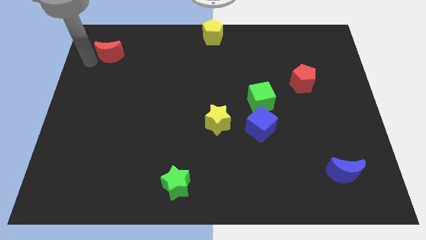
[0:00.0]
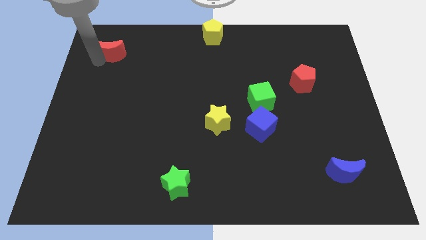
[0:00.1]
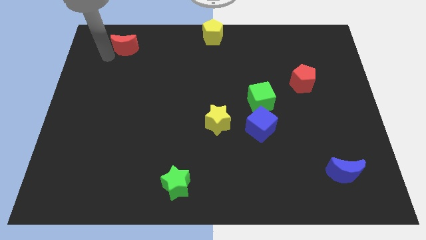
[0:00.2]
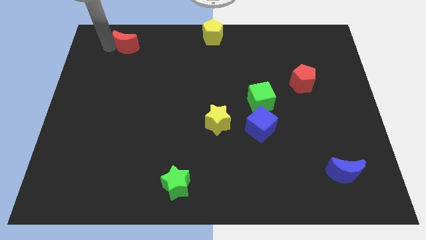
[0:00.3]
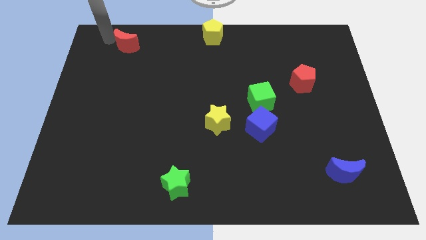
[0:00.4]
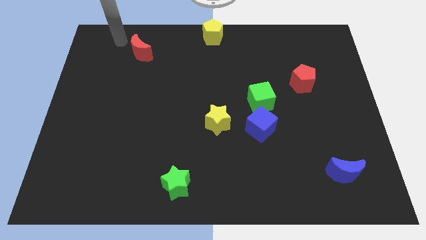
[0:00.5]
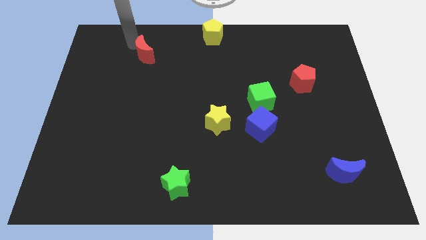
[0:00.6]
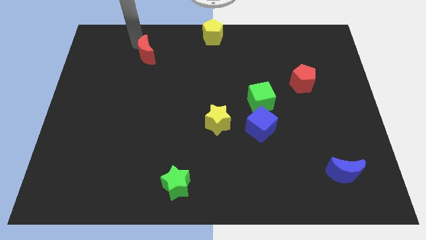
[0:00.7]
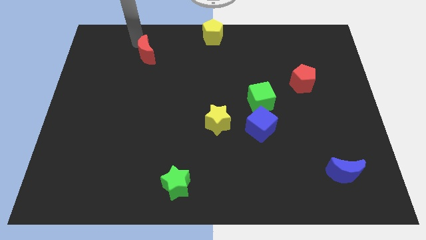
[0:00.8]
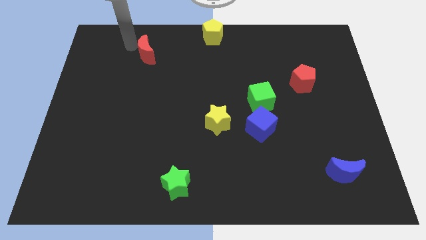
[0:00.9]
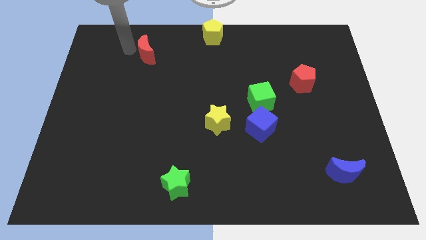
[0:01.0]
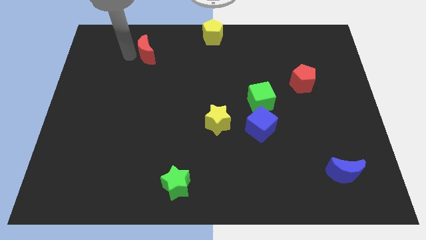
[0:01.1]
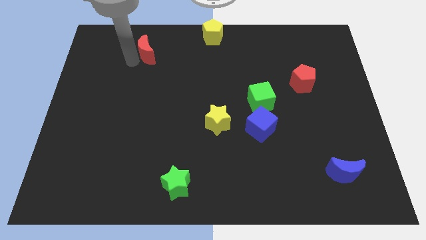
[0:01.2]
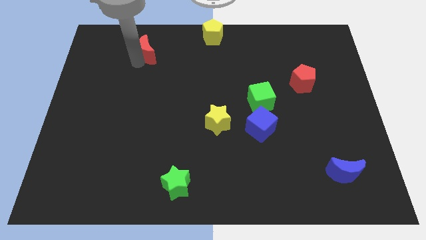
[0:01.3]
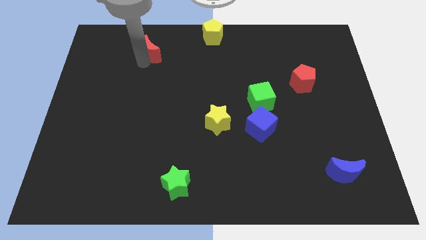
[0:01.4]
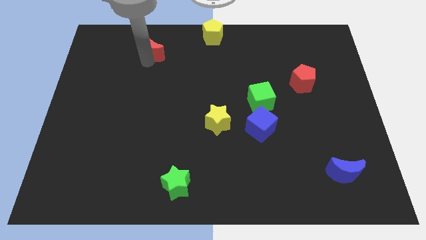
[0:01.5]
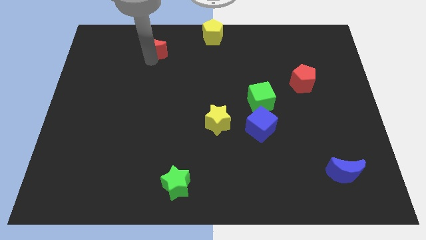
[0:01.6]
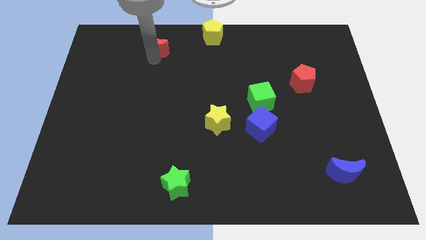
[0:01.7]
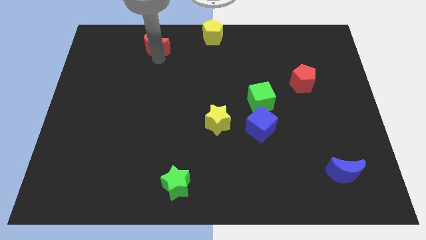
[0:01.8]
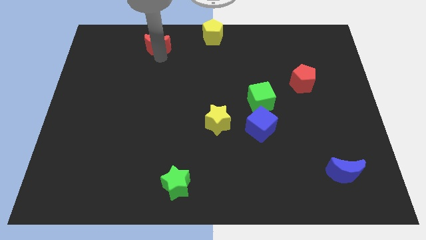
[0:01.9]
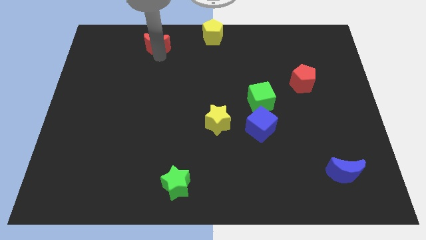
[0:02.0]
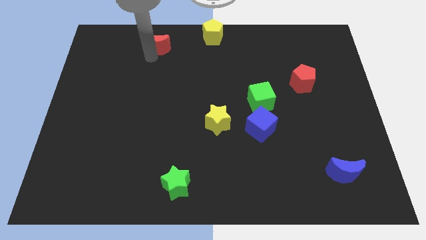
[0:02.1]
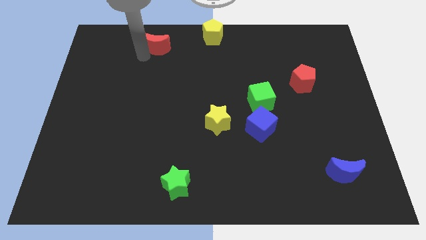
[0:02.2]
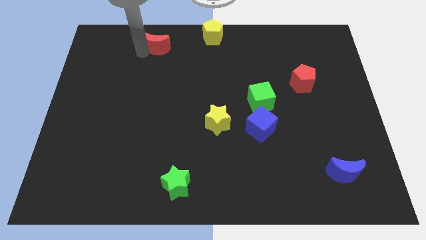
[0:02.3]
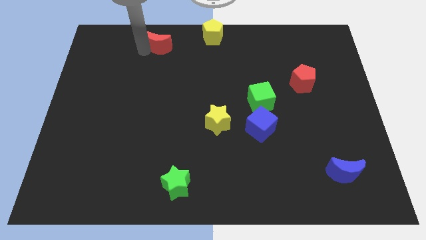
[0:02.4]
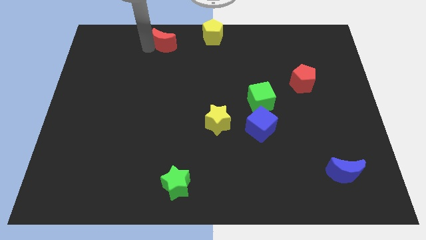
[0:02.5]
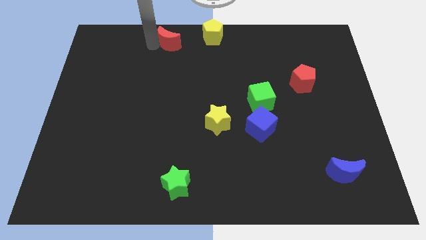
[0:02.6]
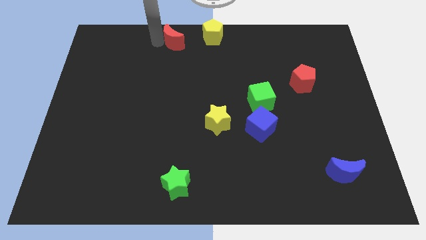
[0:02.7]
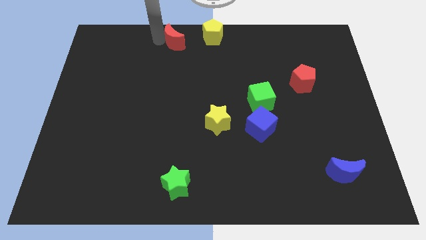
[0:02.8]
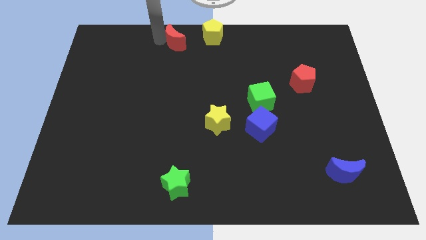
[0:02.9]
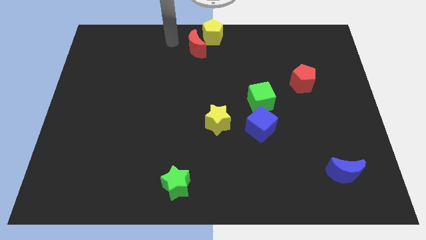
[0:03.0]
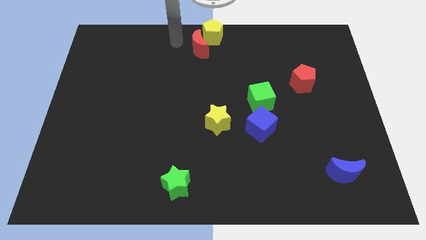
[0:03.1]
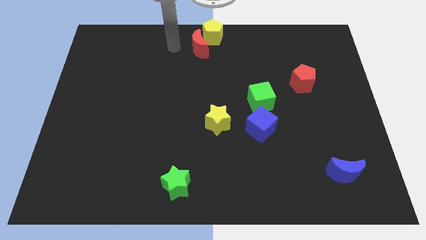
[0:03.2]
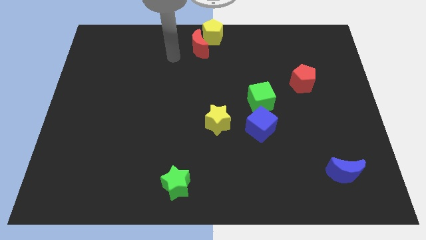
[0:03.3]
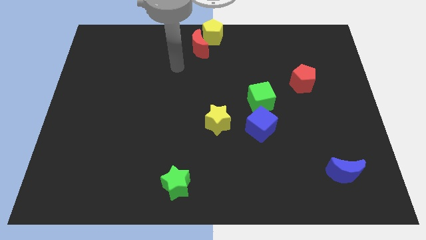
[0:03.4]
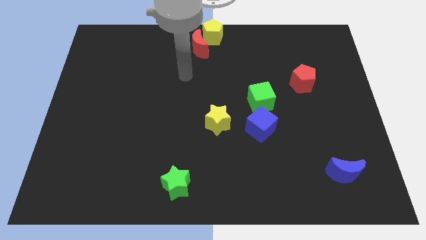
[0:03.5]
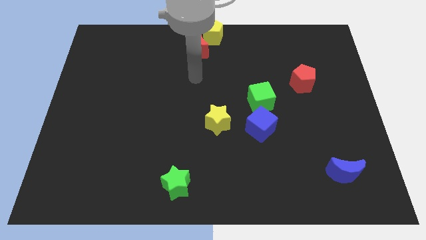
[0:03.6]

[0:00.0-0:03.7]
push the red moon into the yellow pentagon

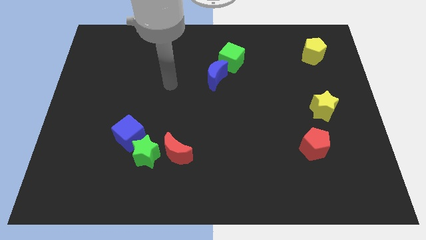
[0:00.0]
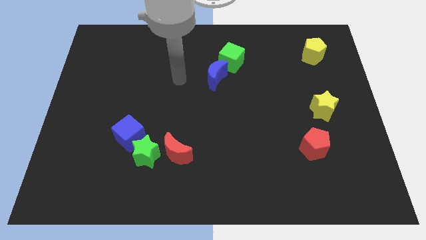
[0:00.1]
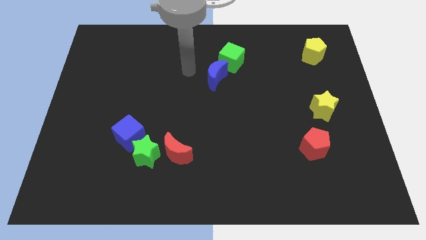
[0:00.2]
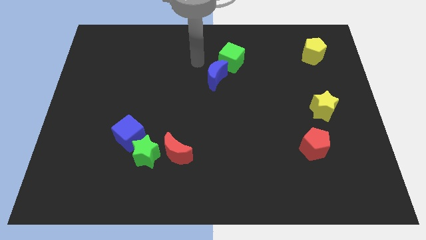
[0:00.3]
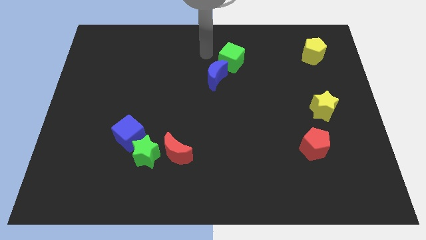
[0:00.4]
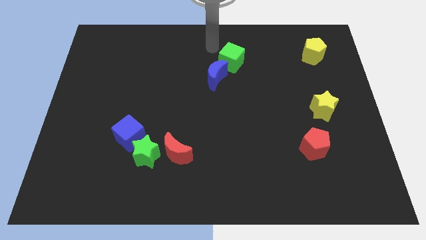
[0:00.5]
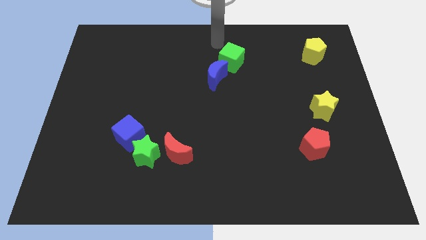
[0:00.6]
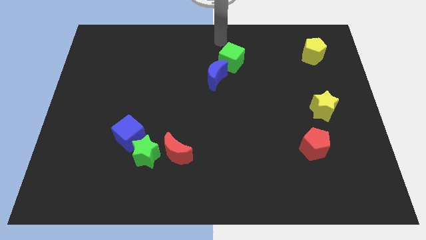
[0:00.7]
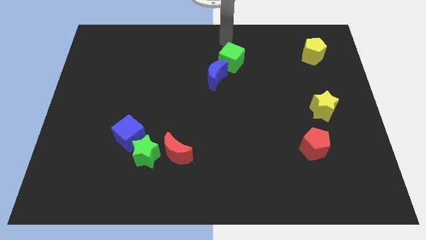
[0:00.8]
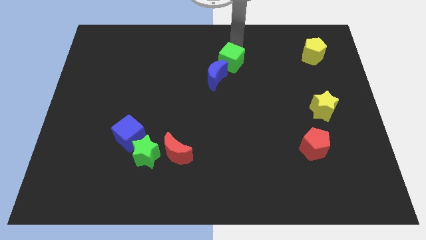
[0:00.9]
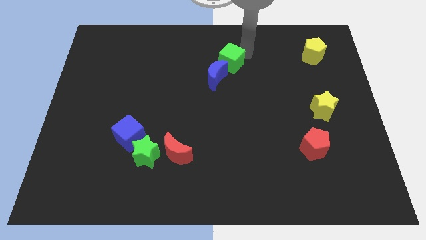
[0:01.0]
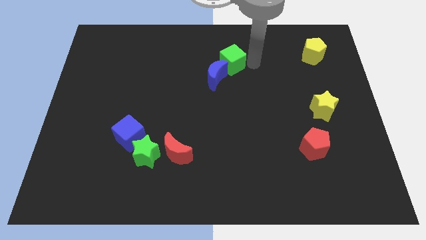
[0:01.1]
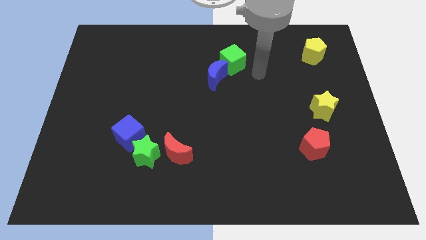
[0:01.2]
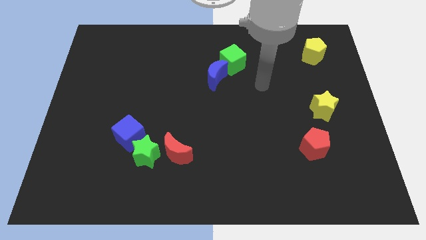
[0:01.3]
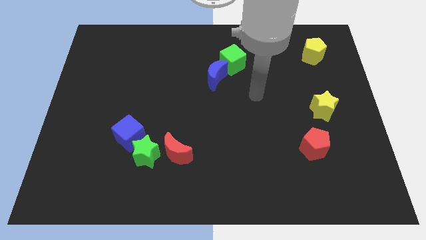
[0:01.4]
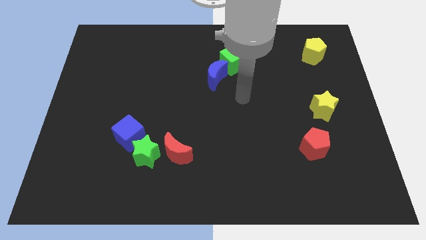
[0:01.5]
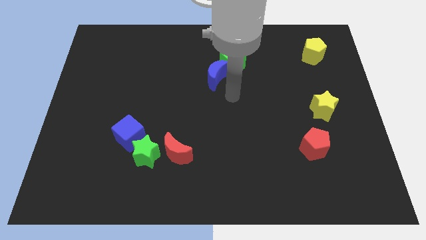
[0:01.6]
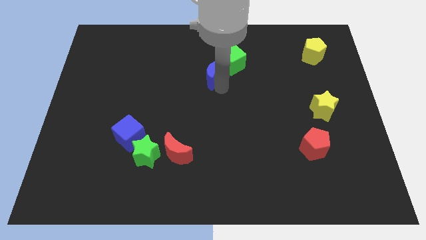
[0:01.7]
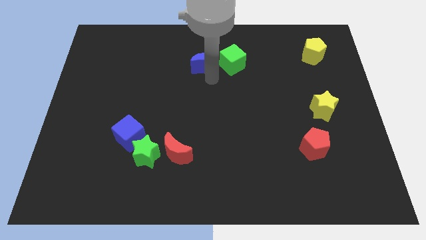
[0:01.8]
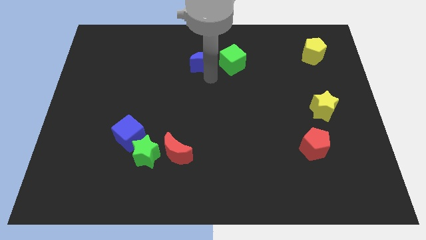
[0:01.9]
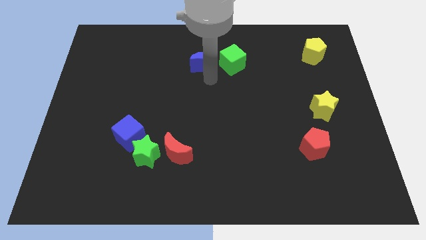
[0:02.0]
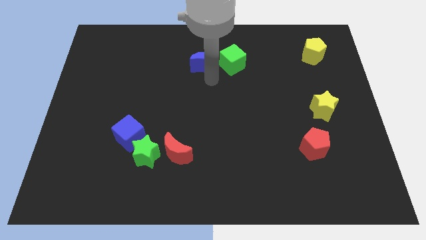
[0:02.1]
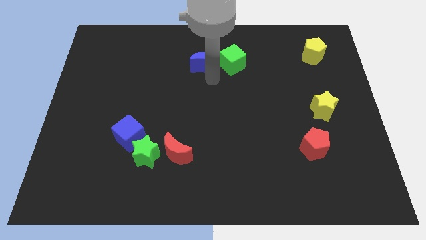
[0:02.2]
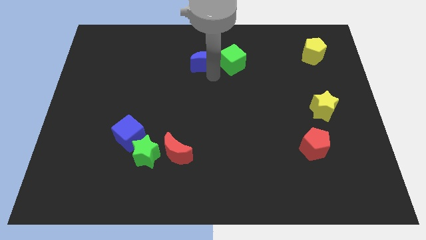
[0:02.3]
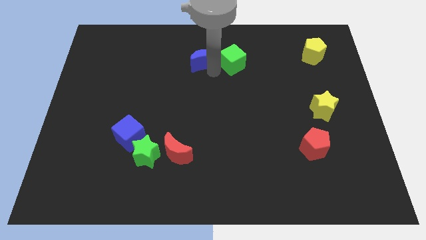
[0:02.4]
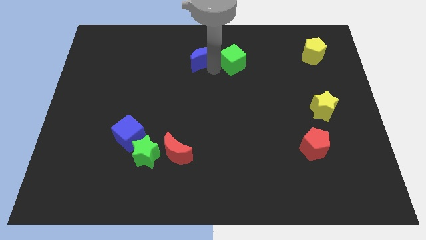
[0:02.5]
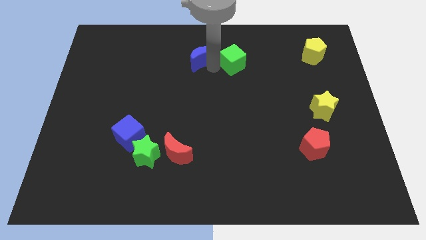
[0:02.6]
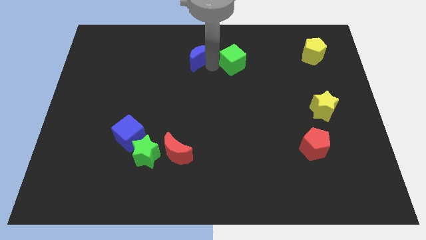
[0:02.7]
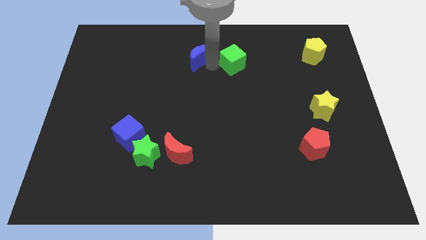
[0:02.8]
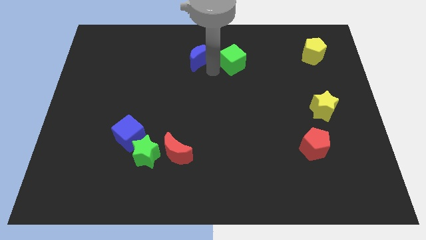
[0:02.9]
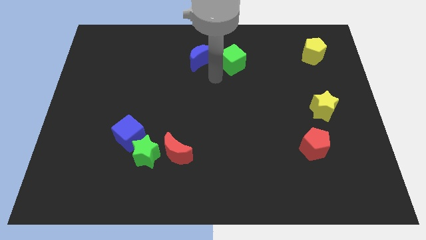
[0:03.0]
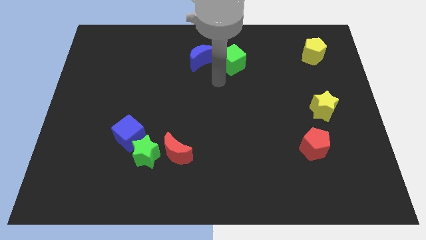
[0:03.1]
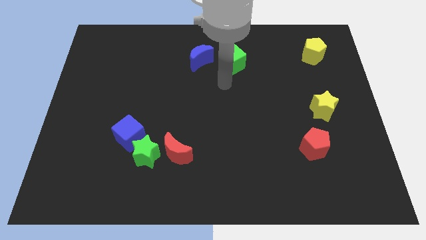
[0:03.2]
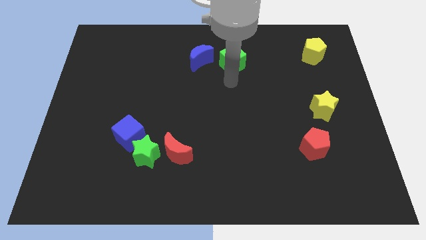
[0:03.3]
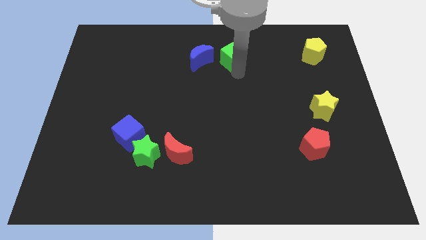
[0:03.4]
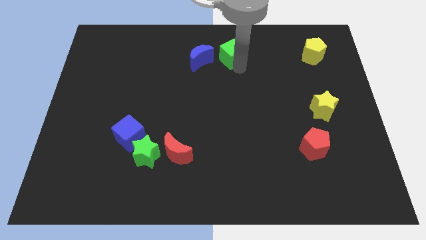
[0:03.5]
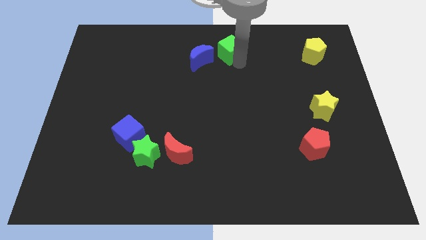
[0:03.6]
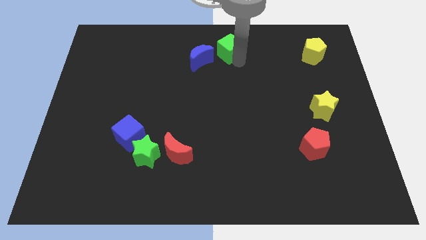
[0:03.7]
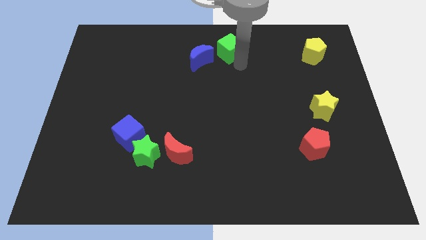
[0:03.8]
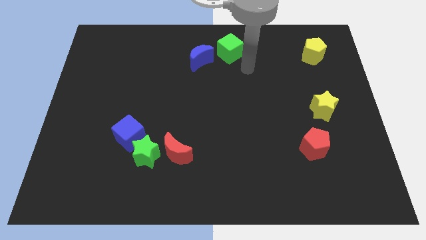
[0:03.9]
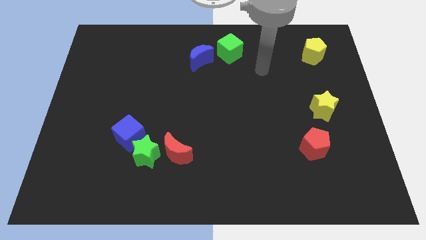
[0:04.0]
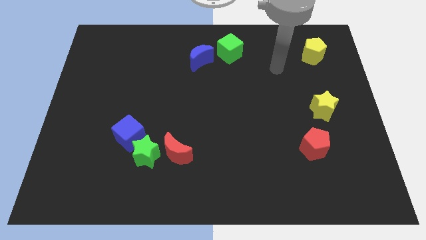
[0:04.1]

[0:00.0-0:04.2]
slightly push the blue moon and green cube upward

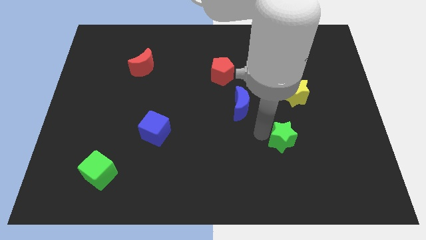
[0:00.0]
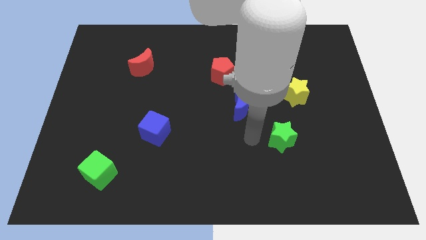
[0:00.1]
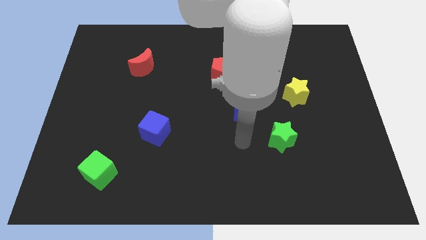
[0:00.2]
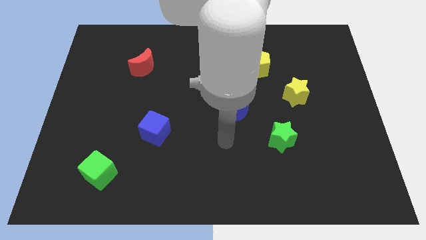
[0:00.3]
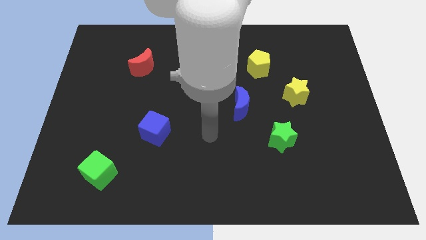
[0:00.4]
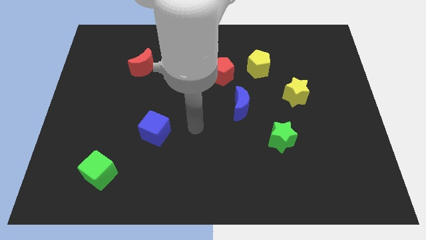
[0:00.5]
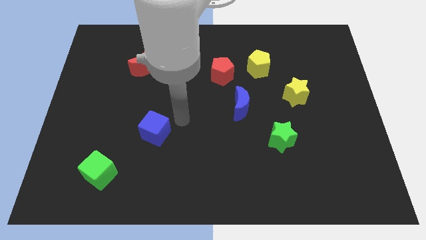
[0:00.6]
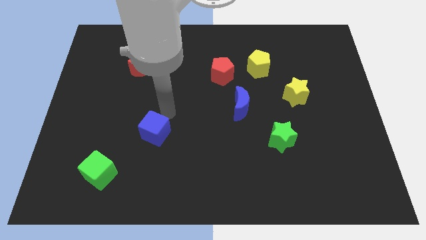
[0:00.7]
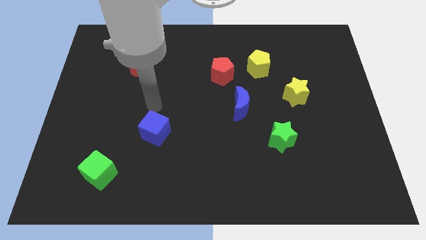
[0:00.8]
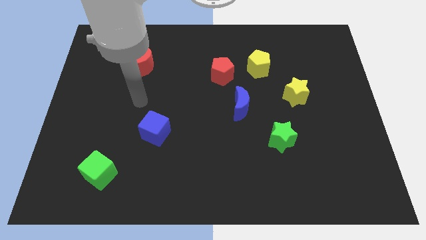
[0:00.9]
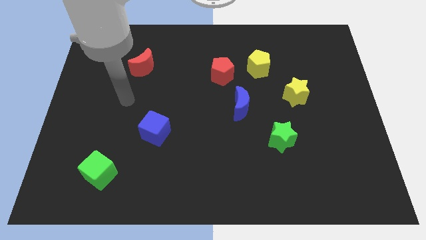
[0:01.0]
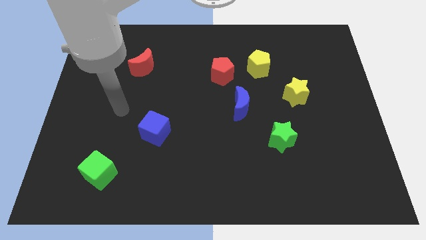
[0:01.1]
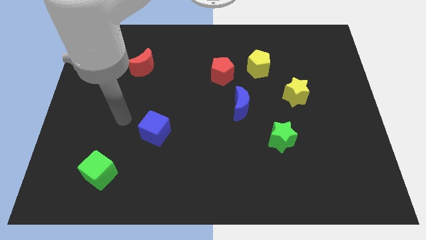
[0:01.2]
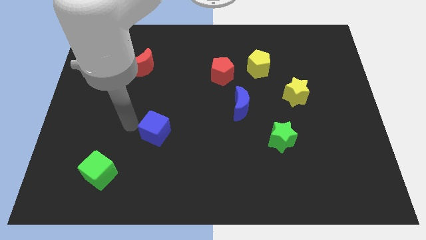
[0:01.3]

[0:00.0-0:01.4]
move the arm towards the left of the blue cube on the board
